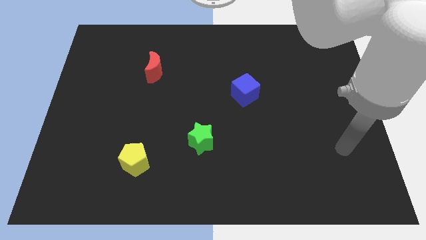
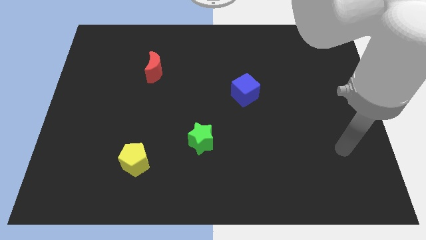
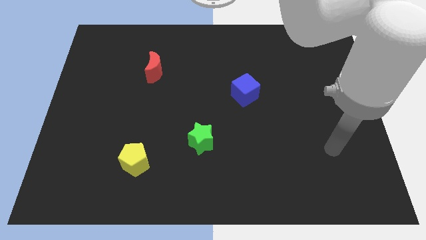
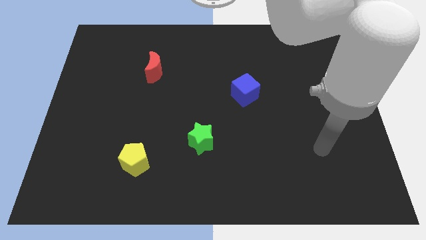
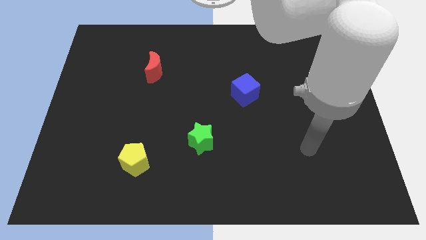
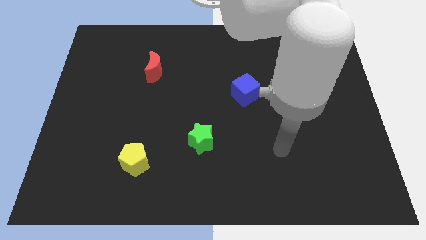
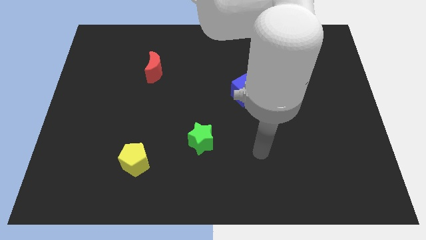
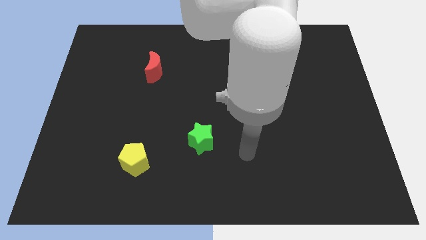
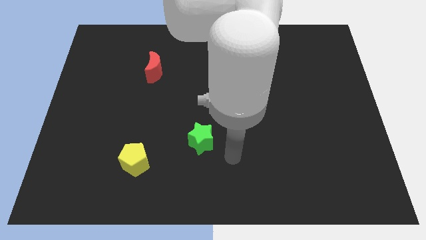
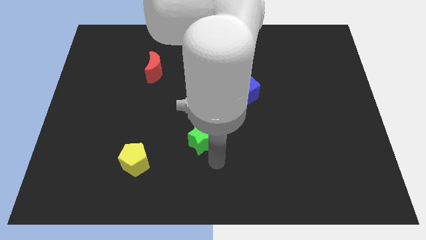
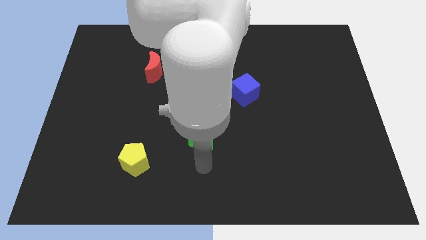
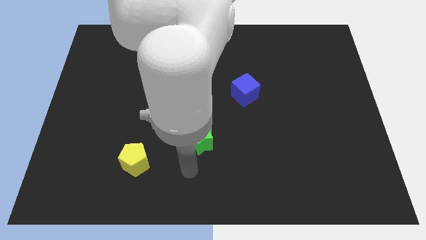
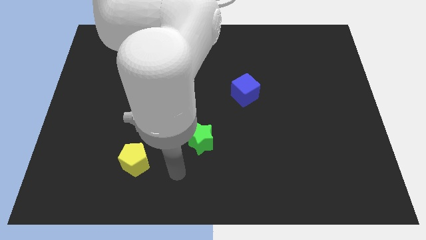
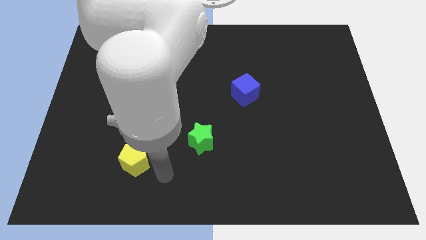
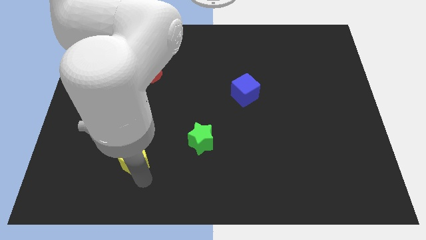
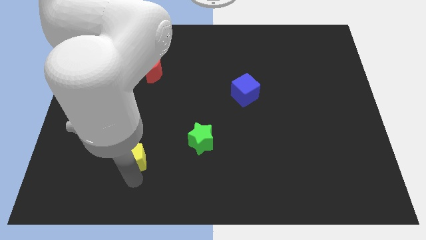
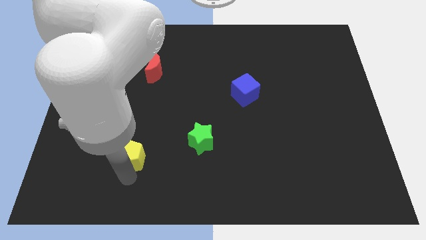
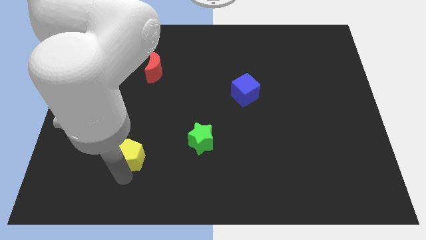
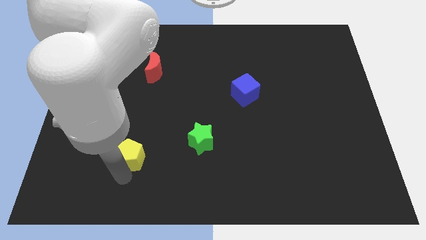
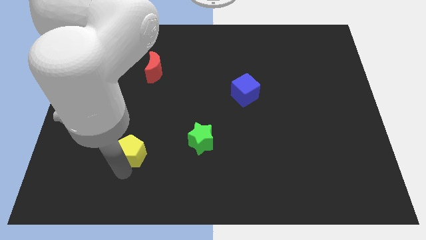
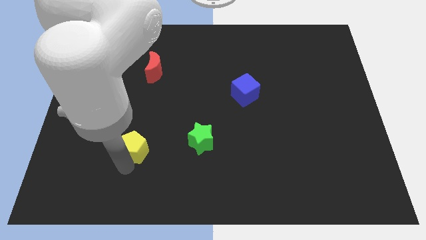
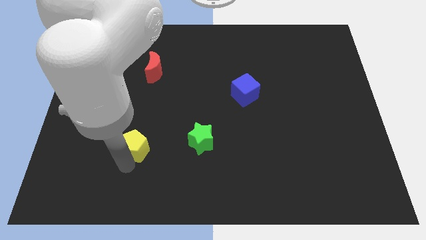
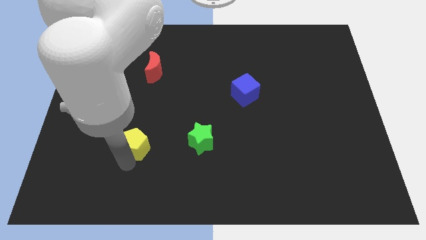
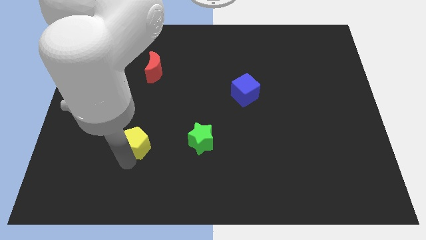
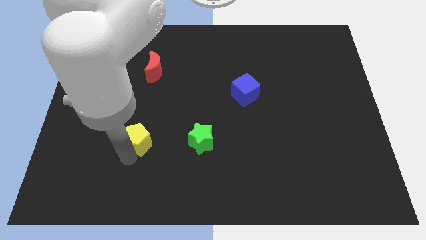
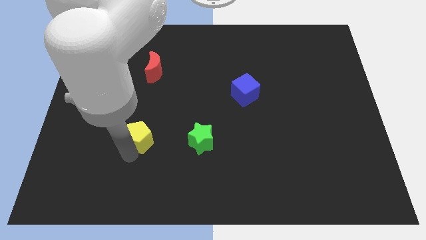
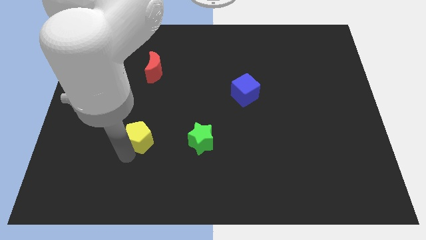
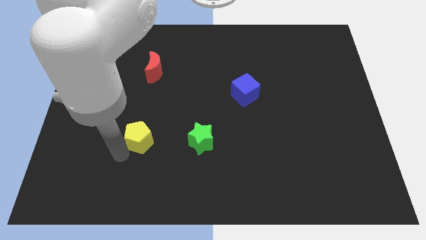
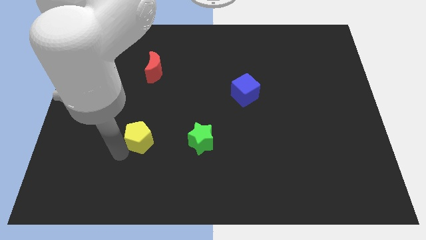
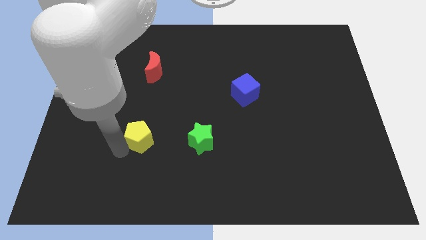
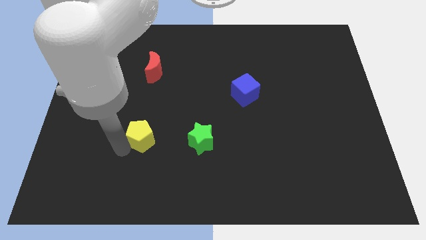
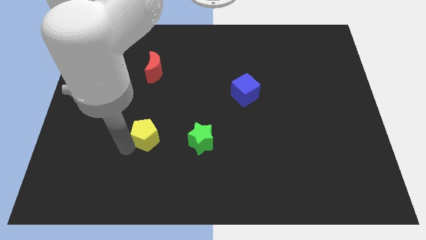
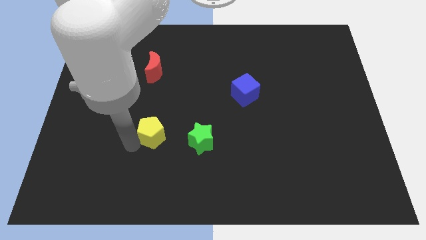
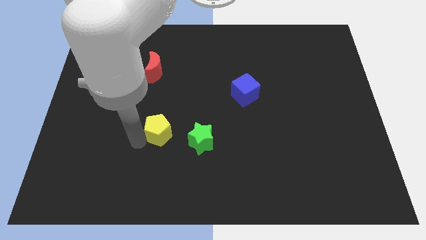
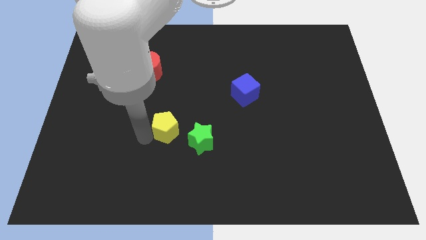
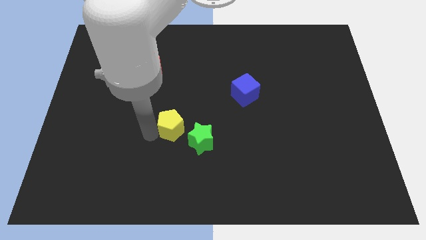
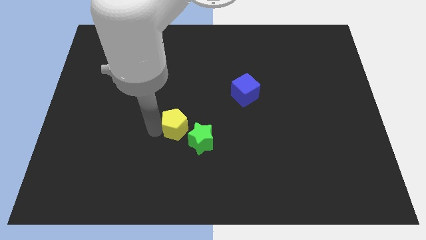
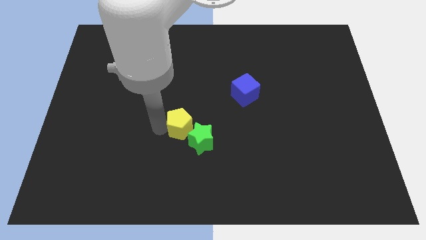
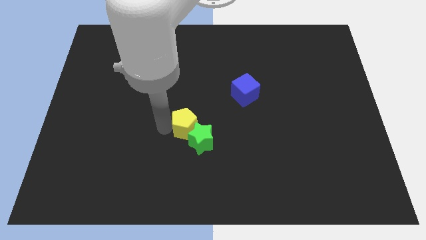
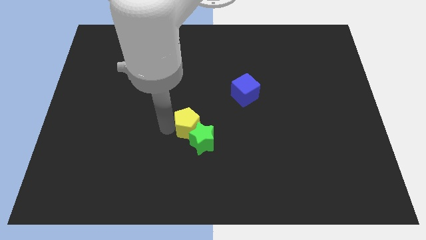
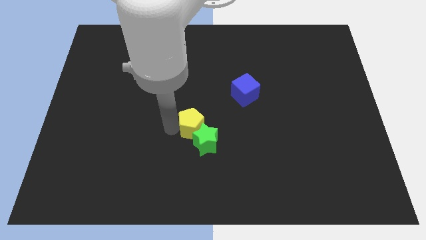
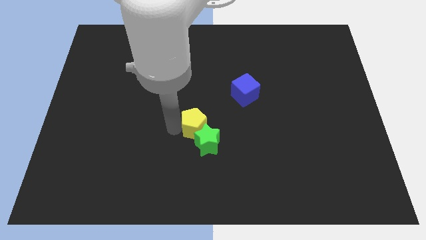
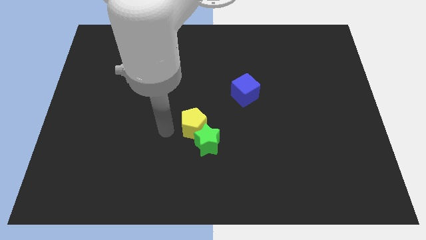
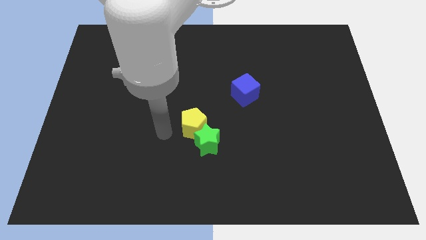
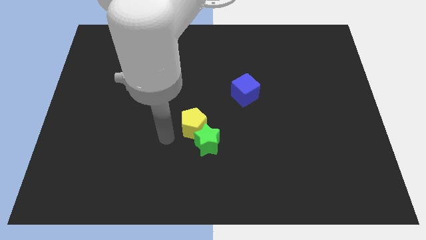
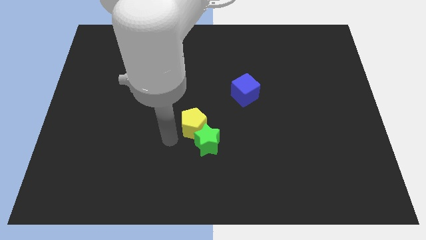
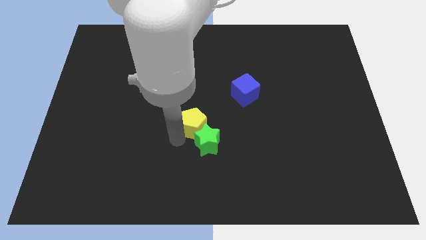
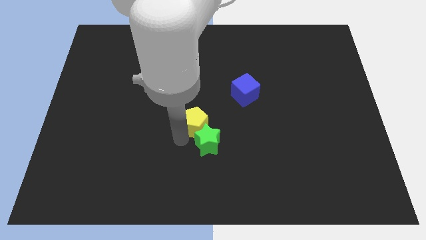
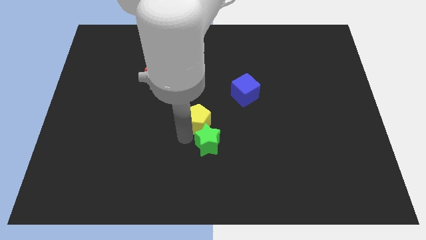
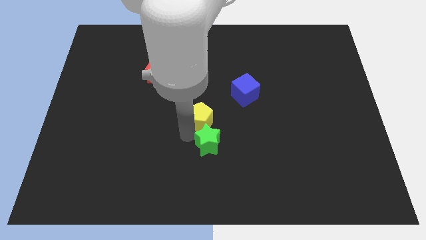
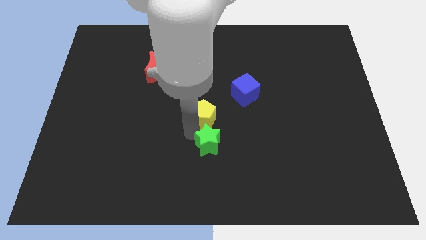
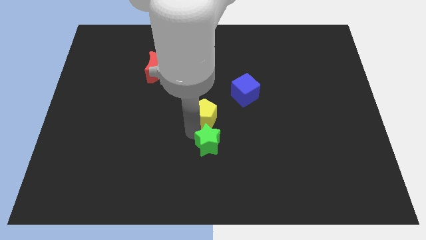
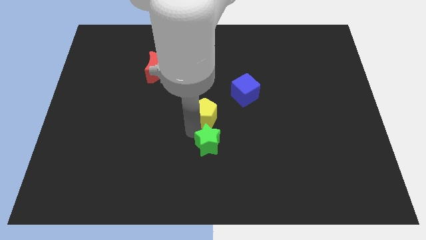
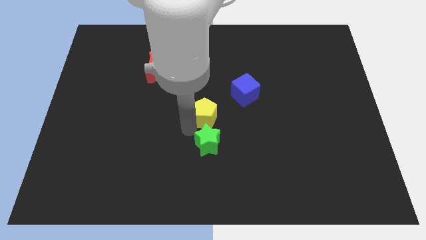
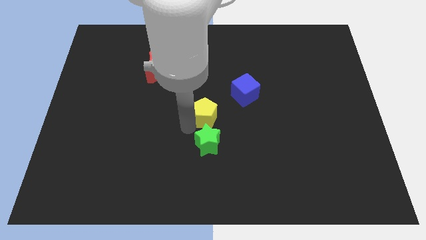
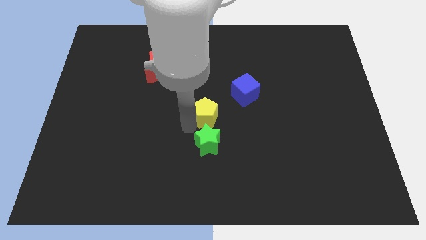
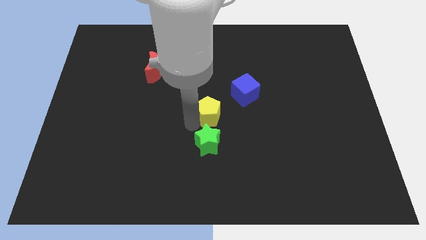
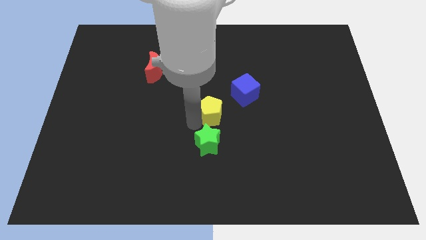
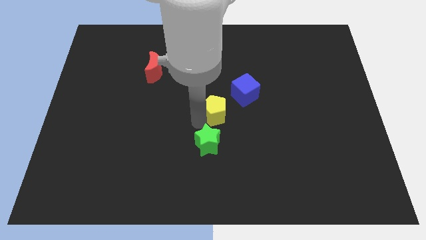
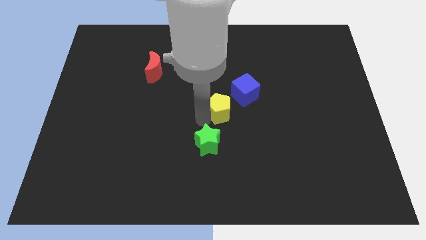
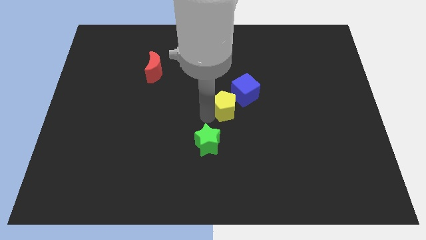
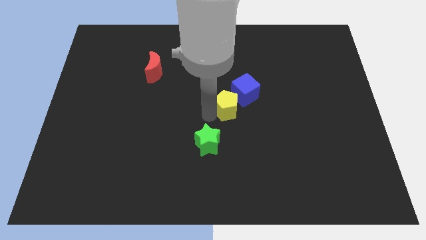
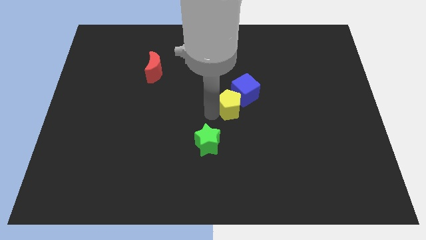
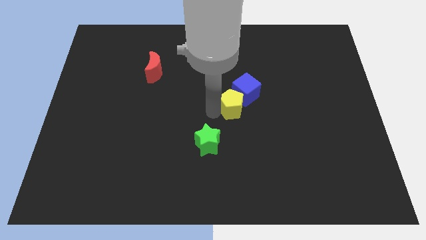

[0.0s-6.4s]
move the yellow pentagon next to the cube

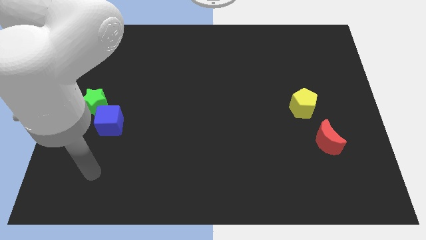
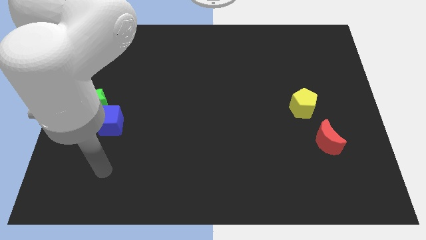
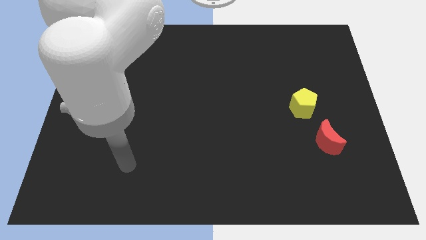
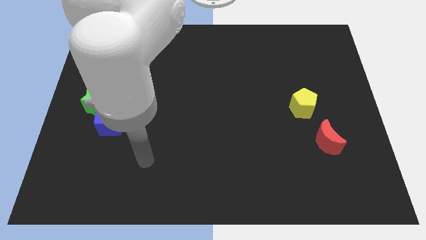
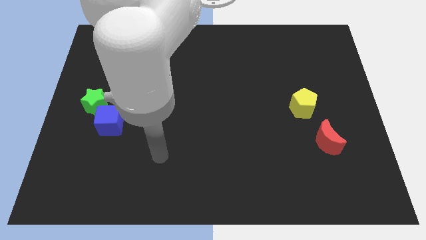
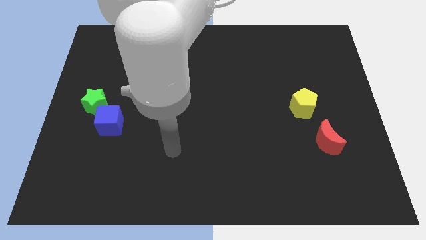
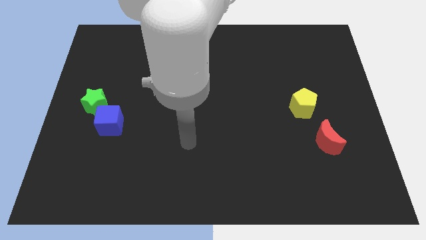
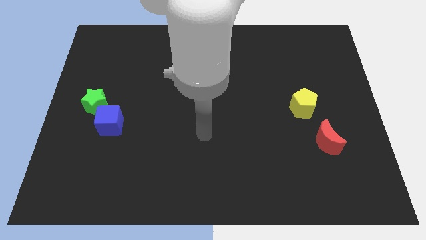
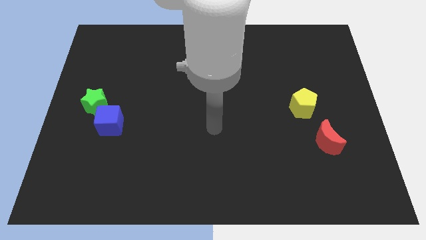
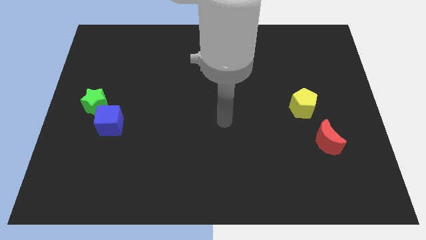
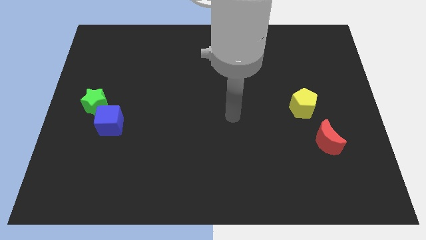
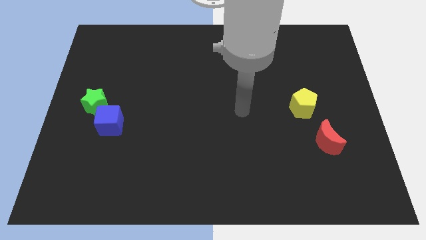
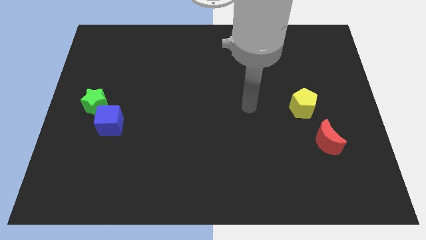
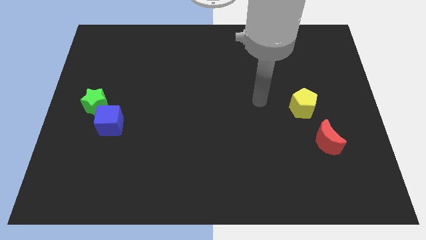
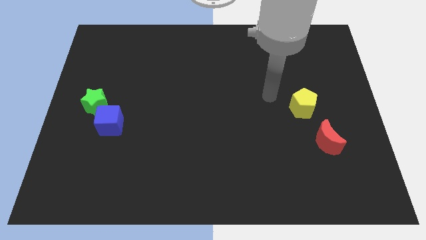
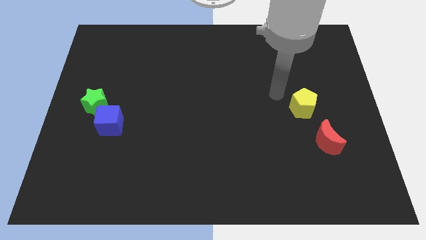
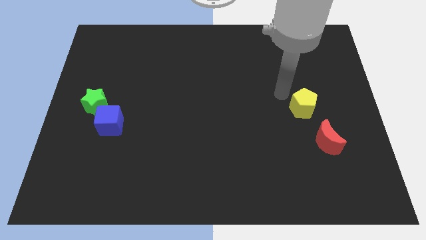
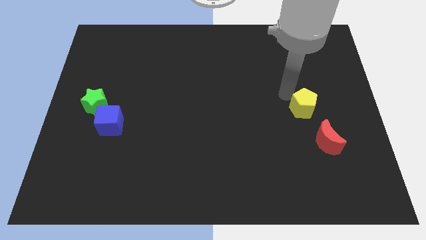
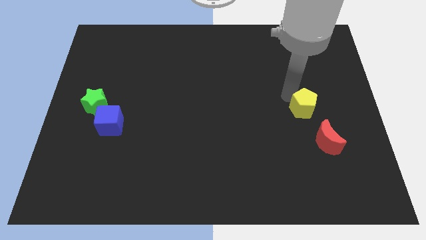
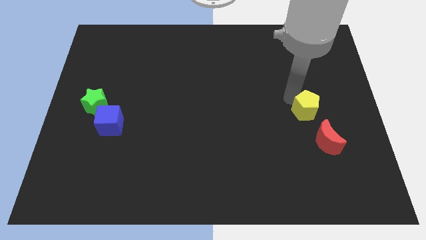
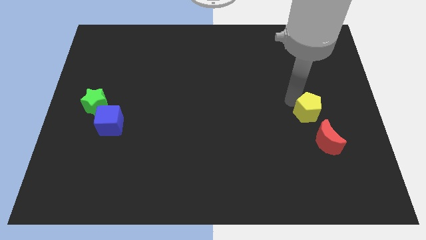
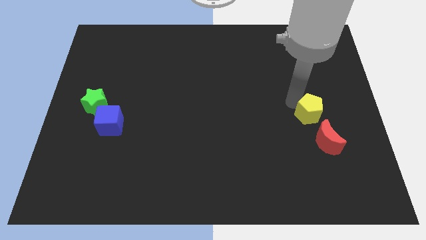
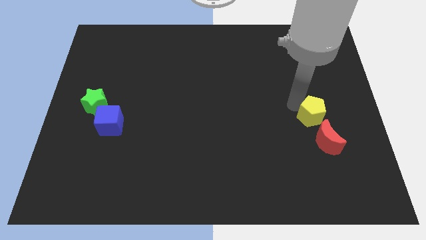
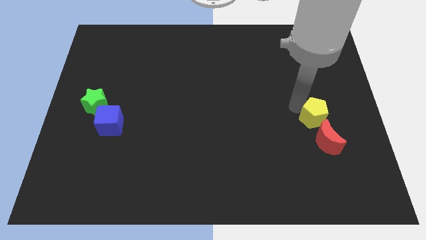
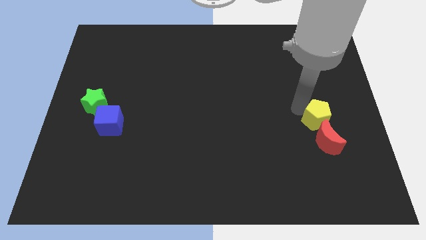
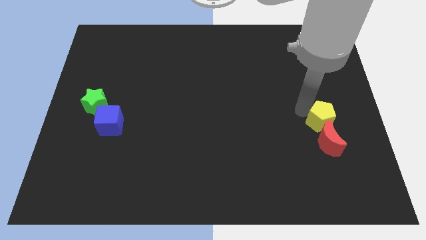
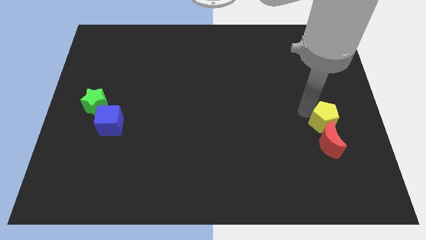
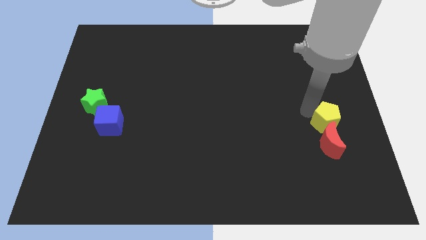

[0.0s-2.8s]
put the yellow block towards the moon
